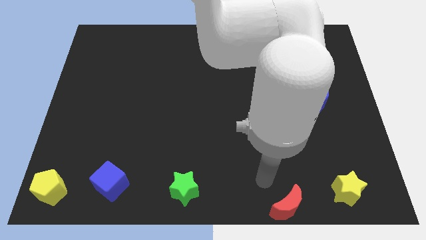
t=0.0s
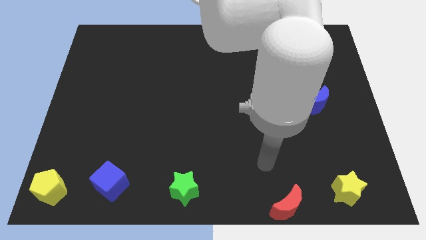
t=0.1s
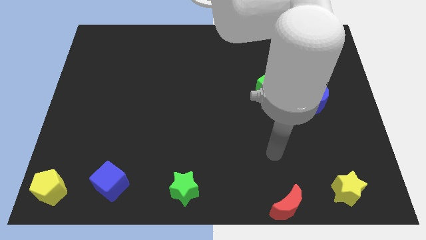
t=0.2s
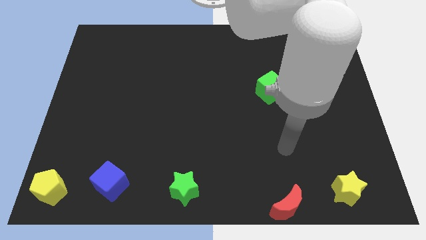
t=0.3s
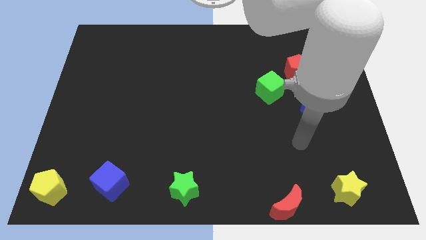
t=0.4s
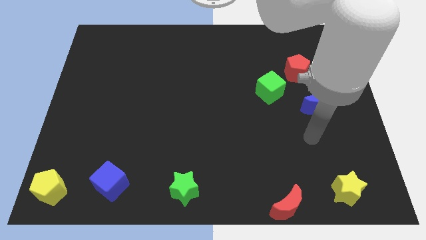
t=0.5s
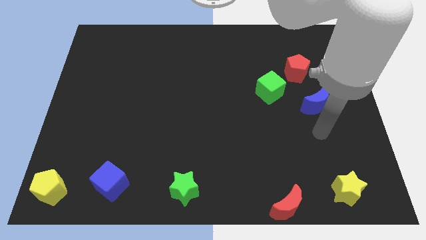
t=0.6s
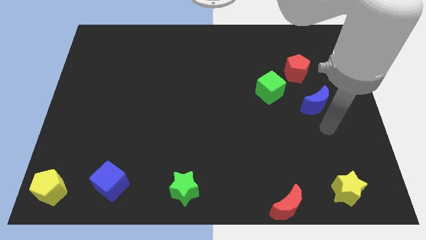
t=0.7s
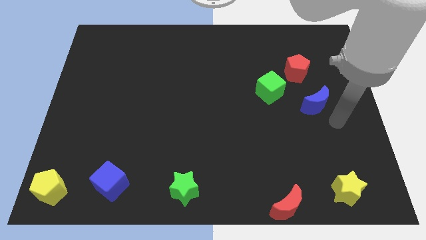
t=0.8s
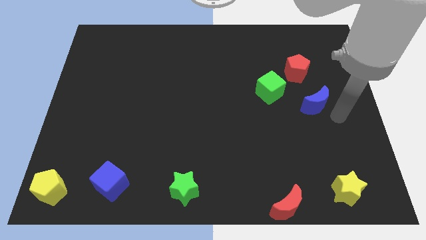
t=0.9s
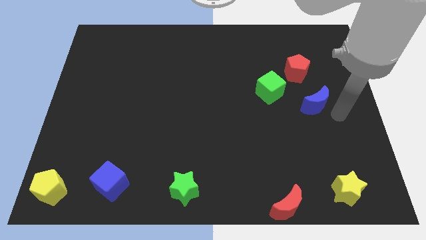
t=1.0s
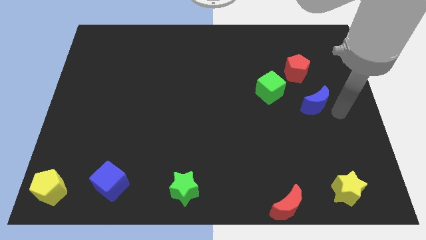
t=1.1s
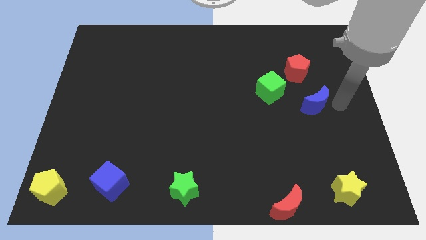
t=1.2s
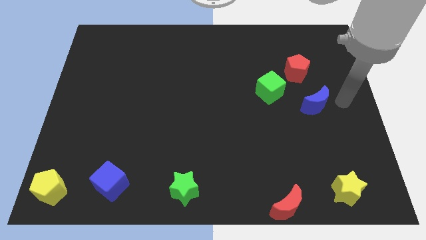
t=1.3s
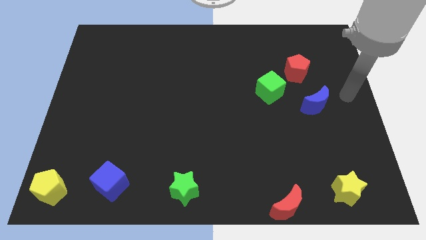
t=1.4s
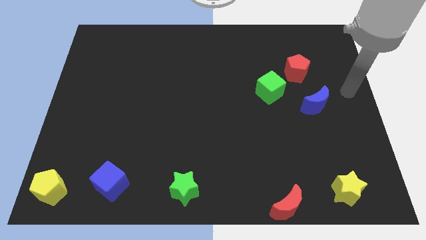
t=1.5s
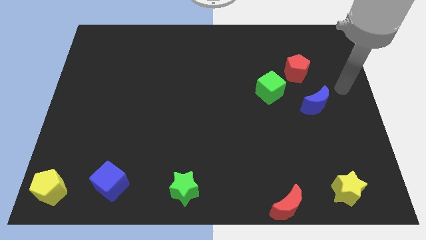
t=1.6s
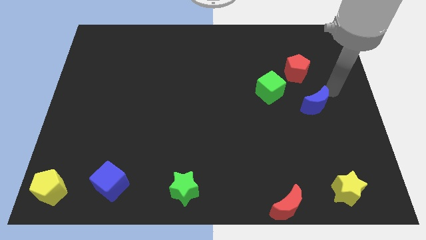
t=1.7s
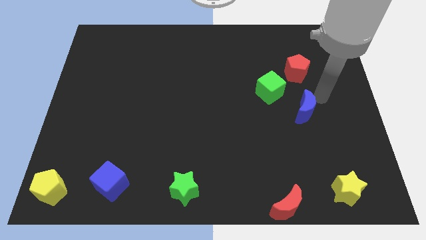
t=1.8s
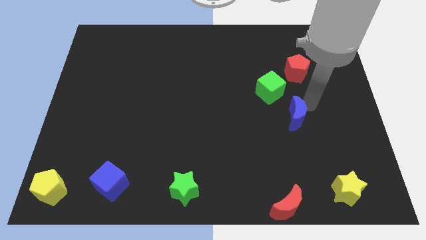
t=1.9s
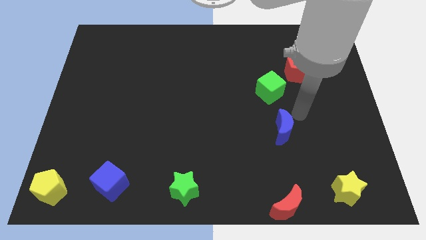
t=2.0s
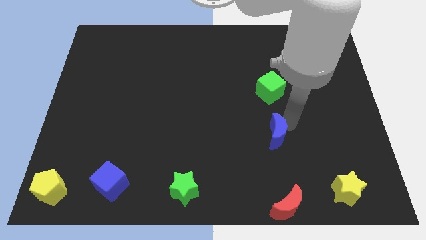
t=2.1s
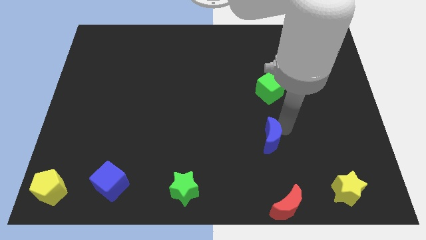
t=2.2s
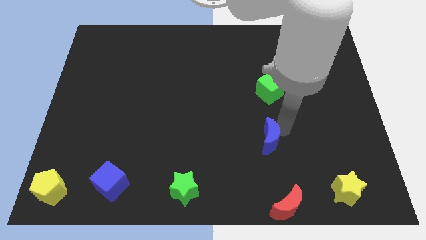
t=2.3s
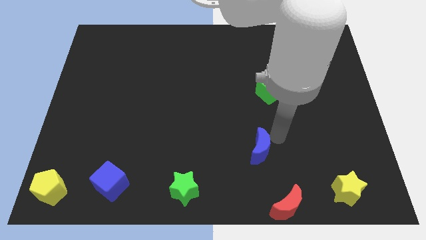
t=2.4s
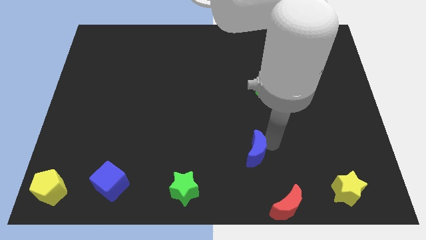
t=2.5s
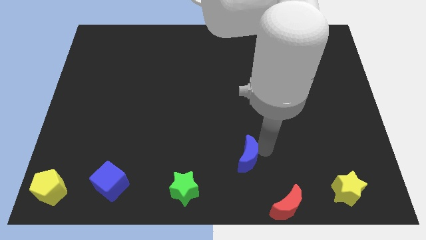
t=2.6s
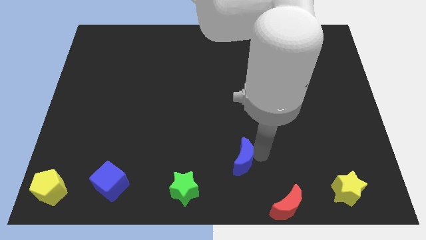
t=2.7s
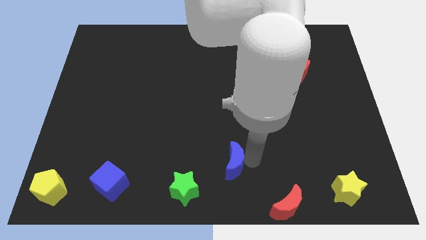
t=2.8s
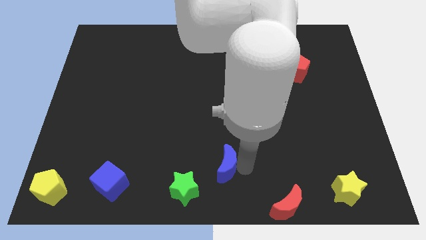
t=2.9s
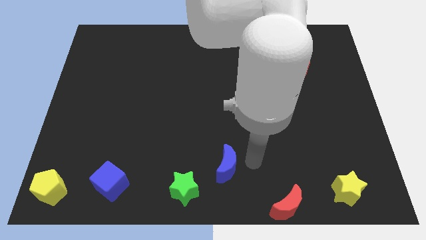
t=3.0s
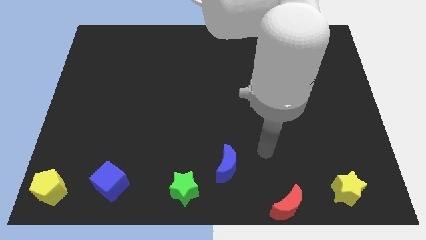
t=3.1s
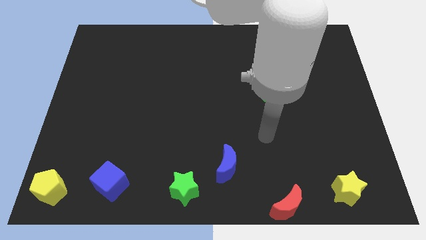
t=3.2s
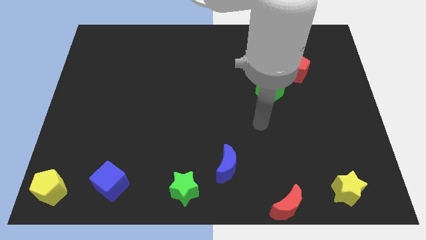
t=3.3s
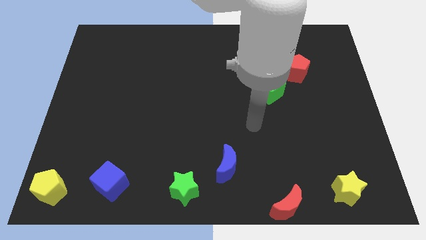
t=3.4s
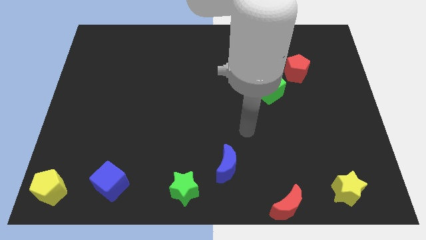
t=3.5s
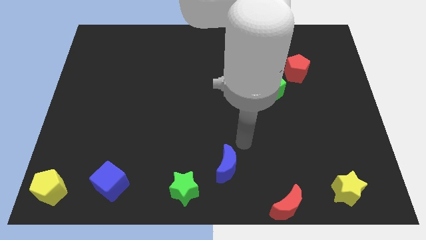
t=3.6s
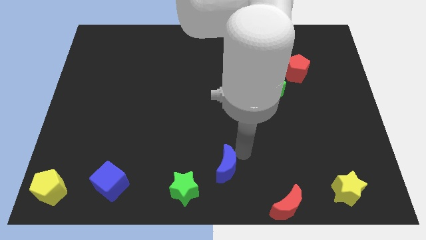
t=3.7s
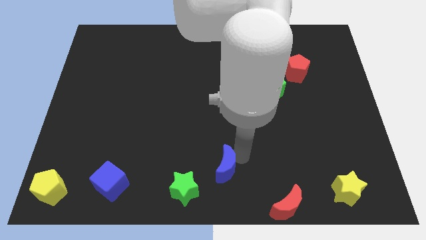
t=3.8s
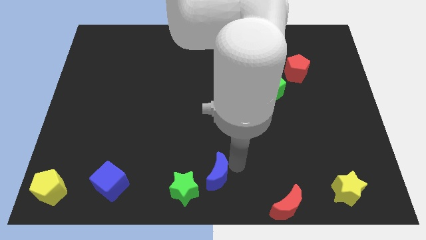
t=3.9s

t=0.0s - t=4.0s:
move the blue crescent towards the right side of the green star

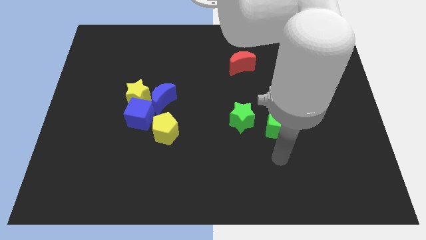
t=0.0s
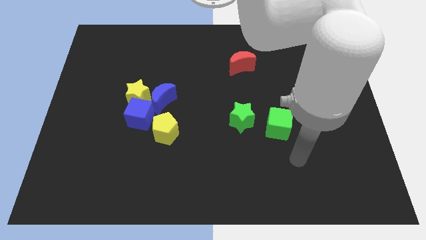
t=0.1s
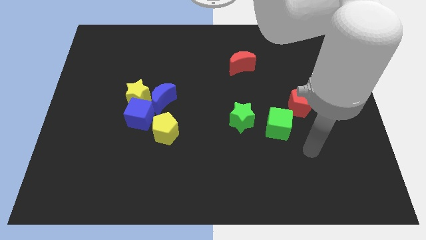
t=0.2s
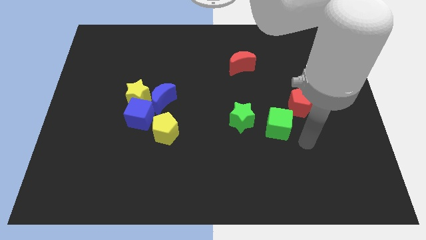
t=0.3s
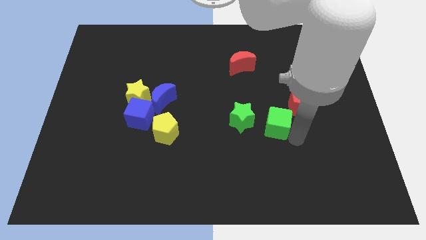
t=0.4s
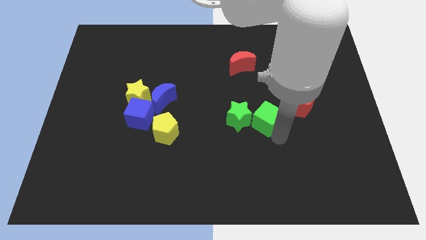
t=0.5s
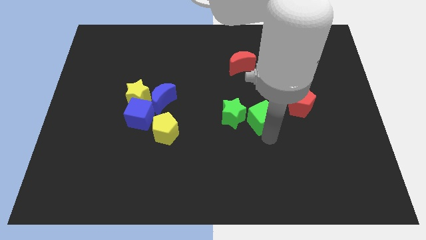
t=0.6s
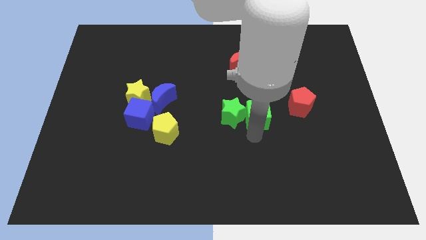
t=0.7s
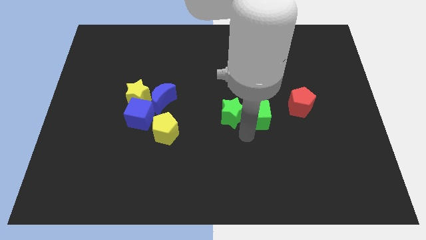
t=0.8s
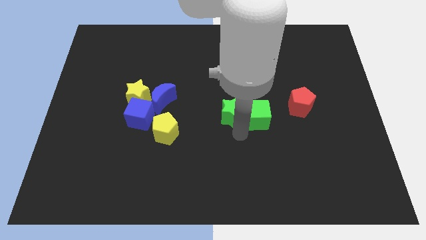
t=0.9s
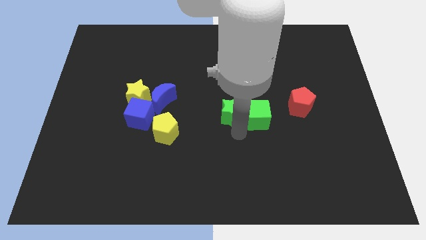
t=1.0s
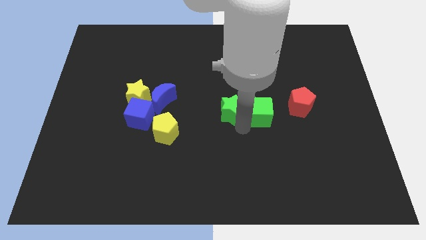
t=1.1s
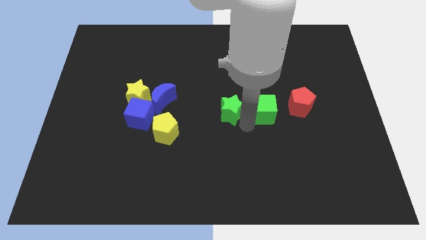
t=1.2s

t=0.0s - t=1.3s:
push green cube to the right of green star

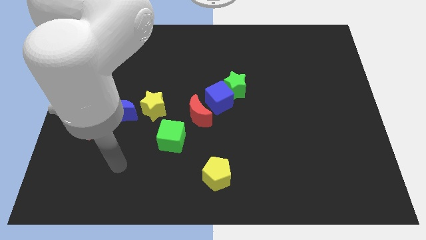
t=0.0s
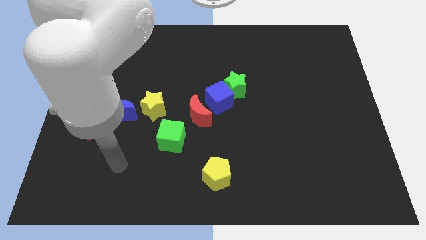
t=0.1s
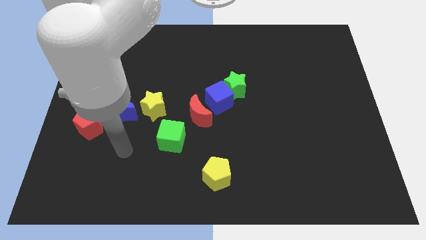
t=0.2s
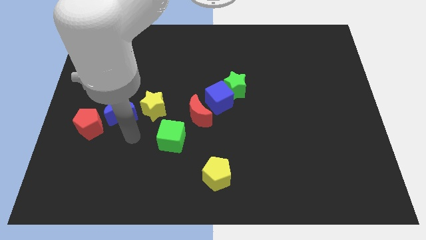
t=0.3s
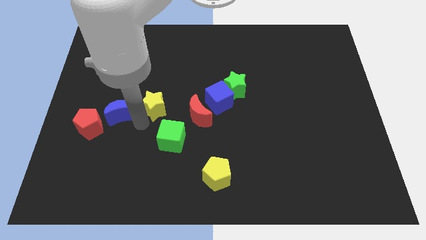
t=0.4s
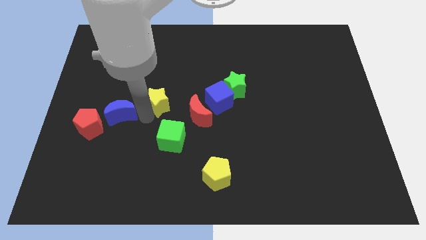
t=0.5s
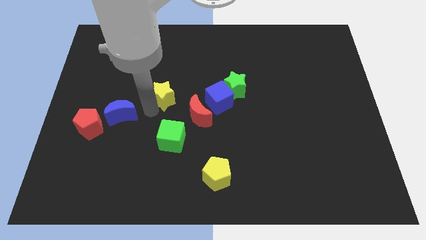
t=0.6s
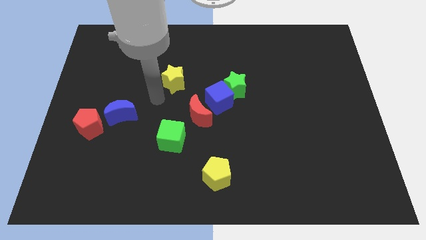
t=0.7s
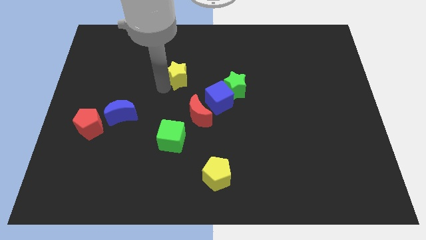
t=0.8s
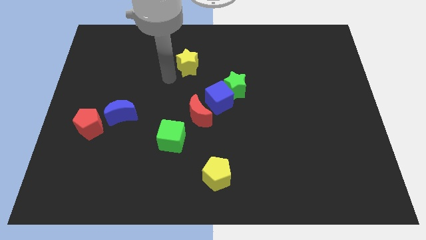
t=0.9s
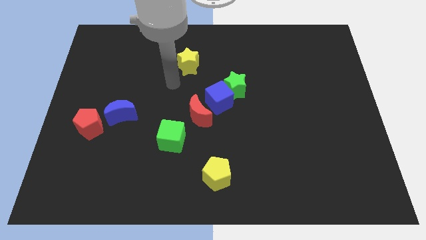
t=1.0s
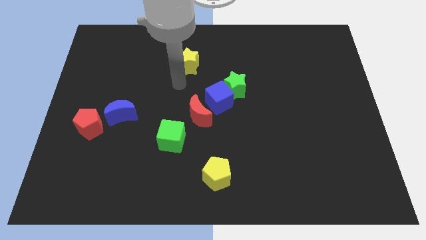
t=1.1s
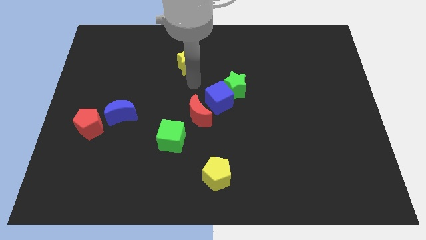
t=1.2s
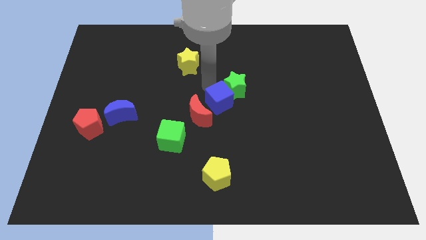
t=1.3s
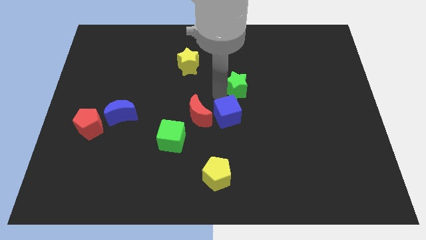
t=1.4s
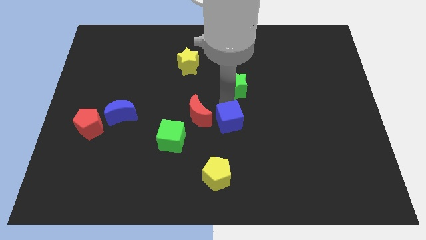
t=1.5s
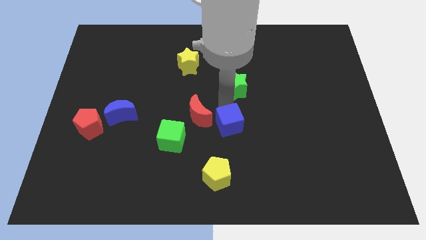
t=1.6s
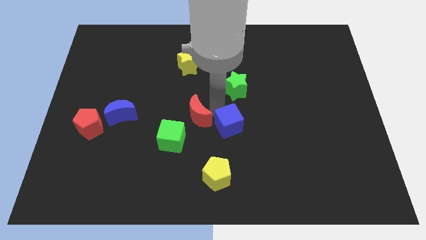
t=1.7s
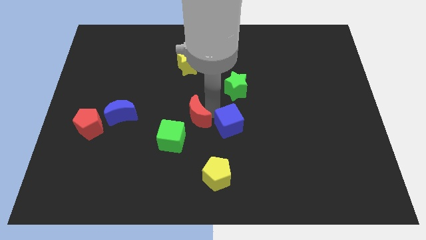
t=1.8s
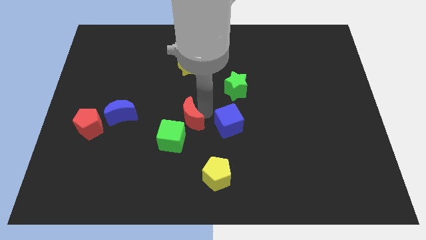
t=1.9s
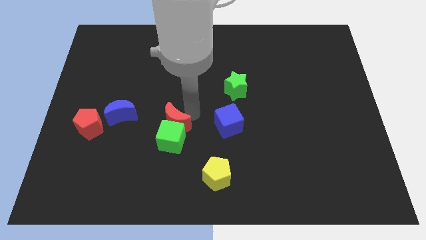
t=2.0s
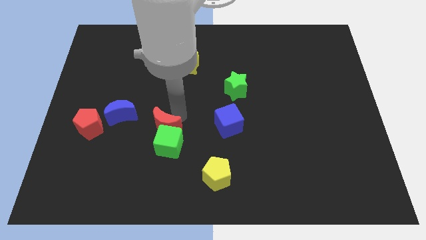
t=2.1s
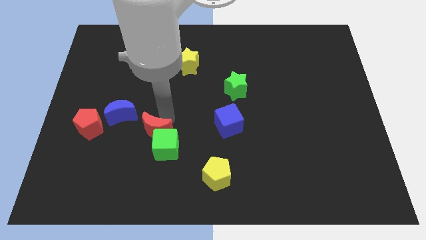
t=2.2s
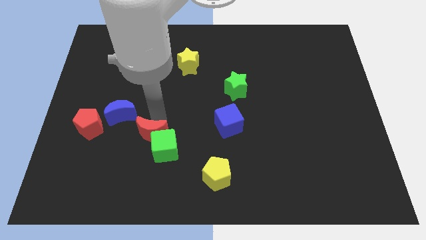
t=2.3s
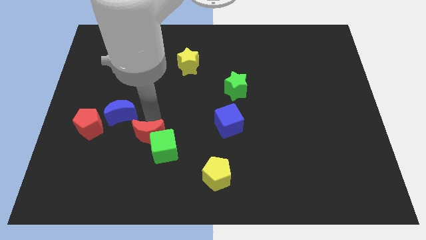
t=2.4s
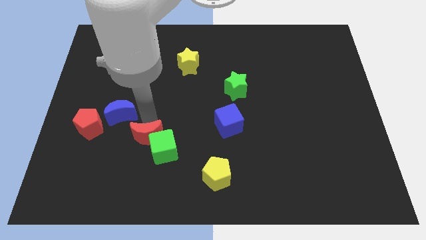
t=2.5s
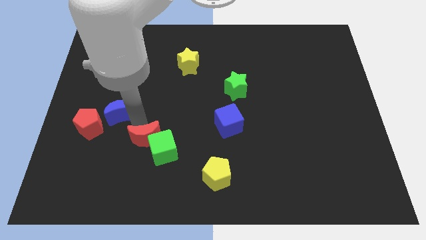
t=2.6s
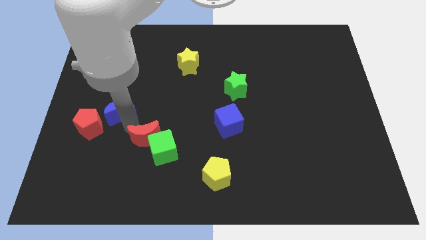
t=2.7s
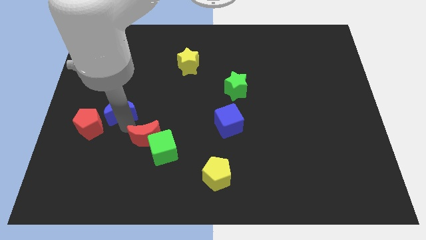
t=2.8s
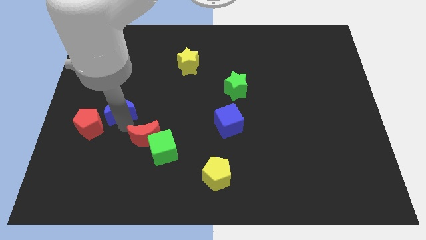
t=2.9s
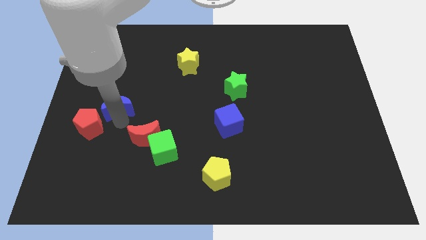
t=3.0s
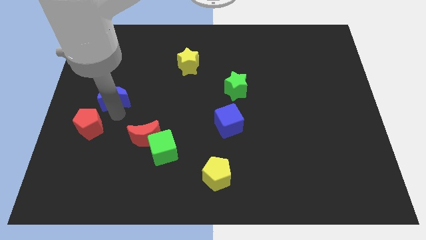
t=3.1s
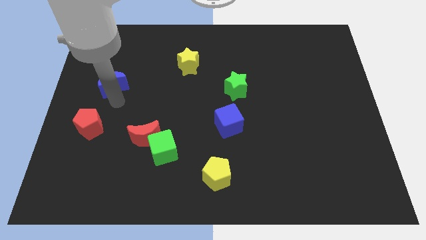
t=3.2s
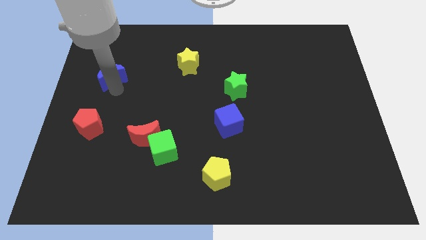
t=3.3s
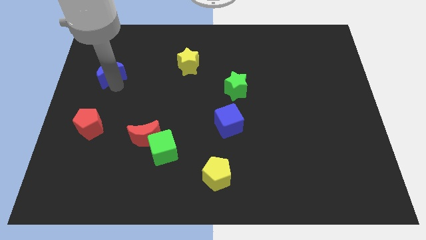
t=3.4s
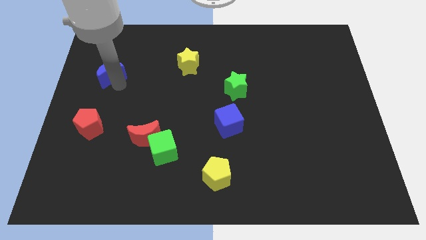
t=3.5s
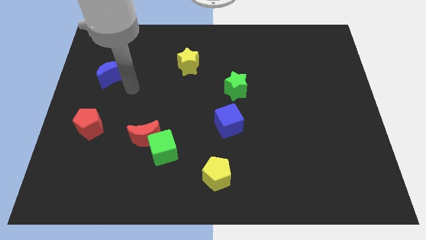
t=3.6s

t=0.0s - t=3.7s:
make a semi circle using a group of blocks except green cube and yellow pentagon
